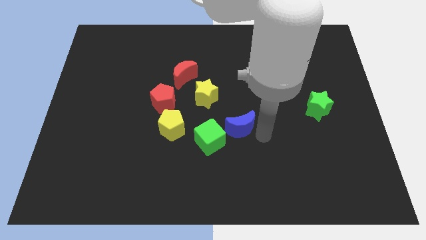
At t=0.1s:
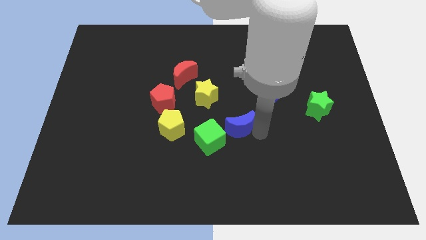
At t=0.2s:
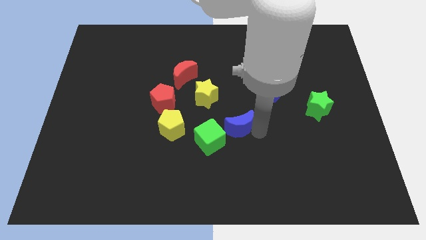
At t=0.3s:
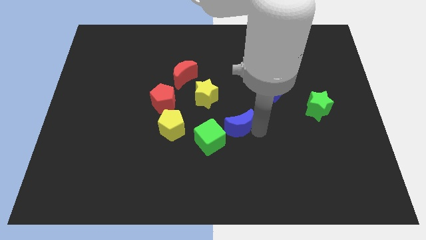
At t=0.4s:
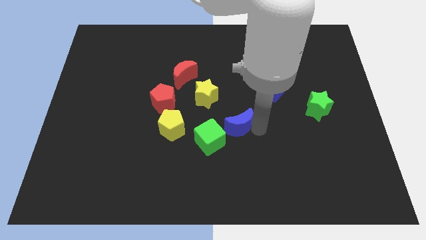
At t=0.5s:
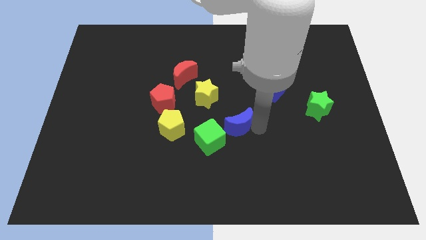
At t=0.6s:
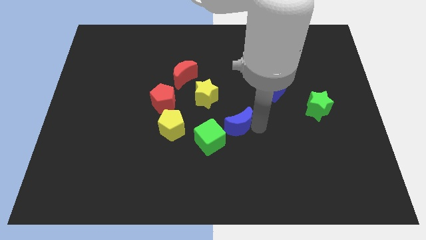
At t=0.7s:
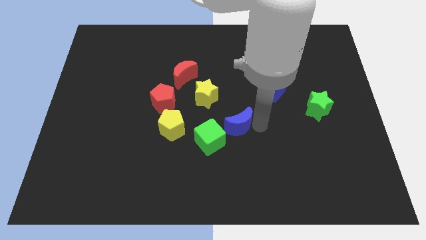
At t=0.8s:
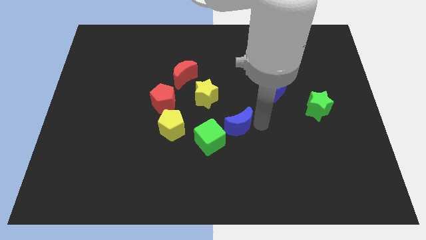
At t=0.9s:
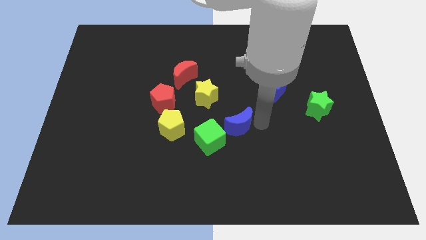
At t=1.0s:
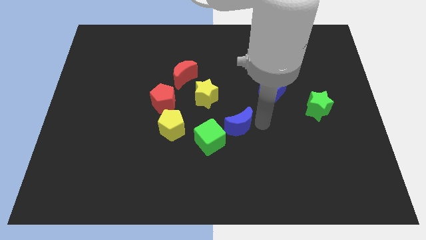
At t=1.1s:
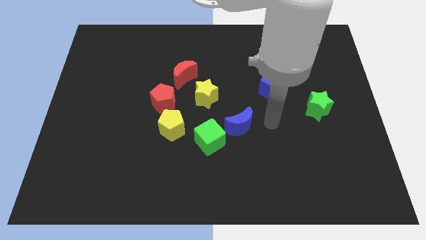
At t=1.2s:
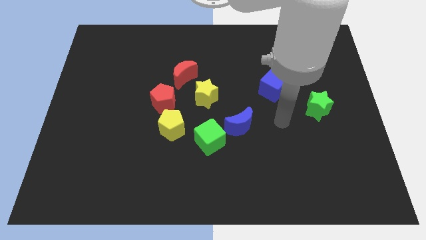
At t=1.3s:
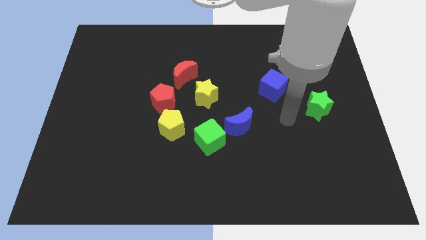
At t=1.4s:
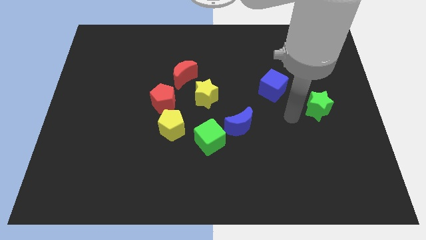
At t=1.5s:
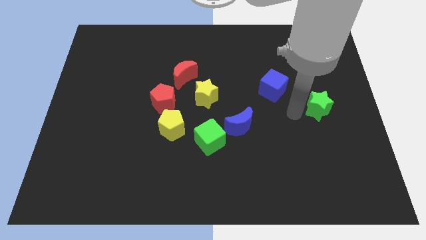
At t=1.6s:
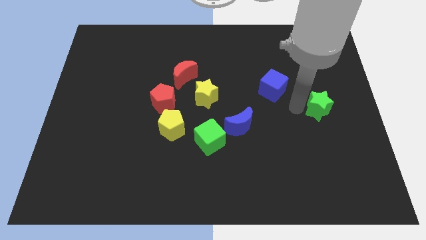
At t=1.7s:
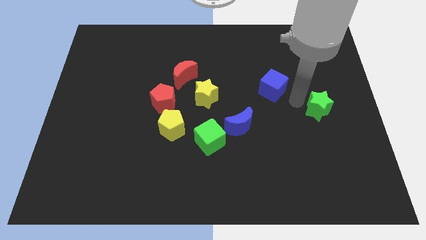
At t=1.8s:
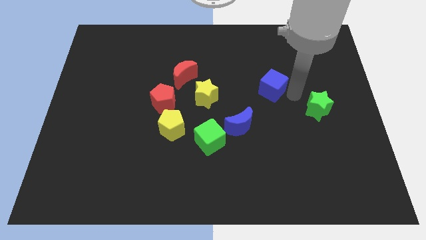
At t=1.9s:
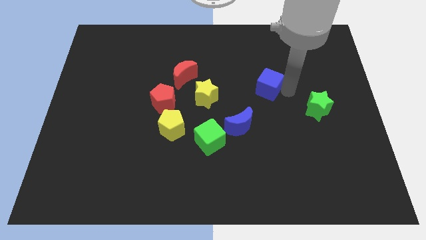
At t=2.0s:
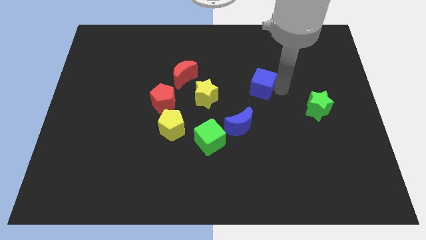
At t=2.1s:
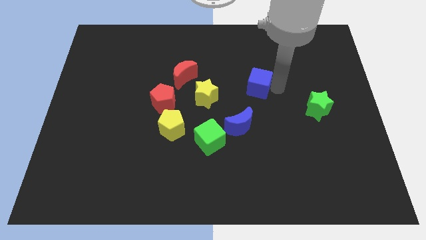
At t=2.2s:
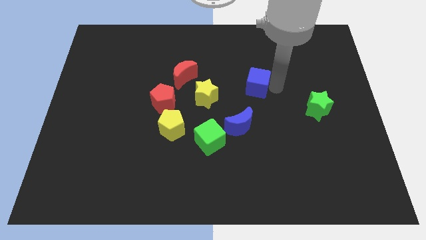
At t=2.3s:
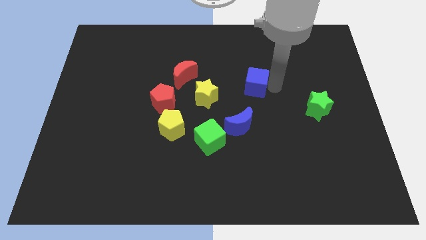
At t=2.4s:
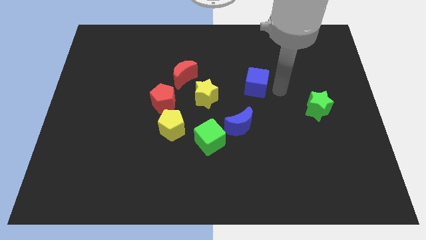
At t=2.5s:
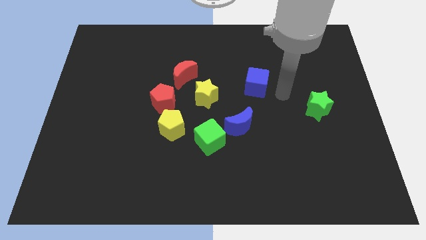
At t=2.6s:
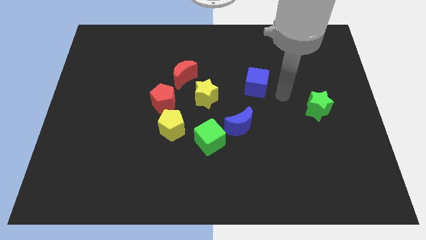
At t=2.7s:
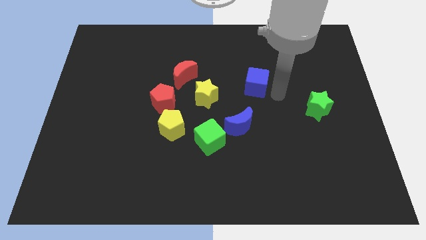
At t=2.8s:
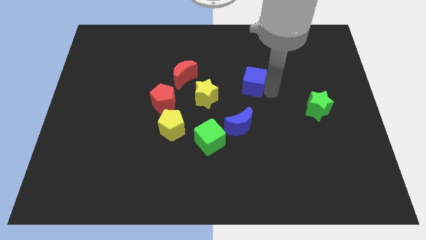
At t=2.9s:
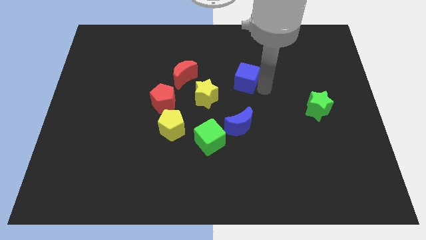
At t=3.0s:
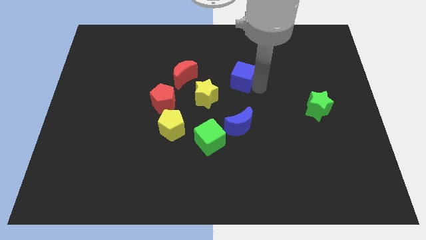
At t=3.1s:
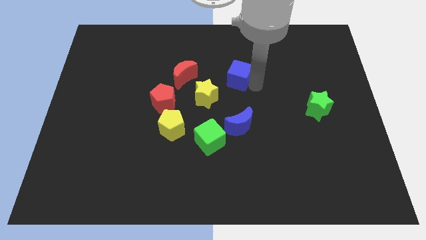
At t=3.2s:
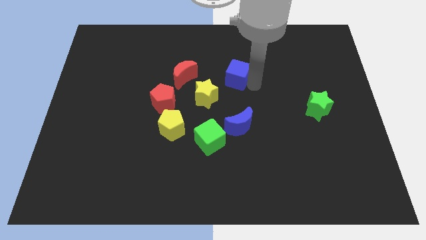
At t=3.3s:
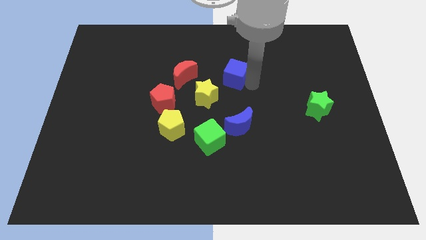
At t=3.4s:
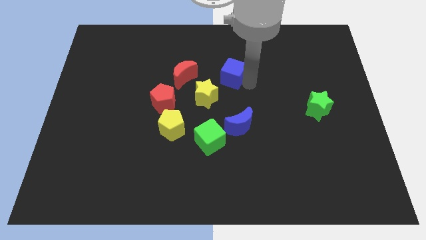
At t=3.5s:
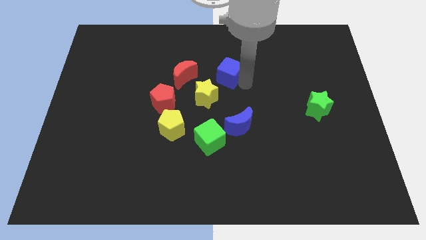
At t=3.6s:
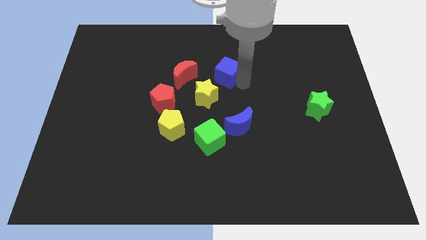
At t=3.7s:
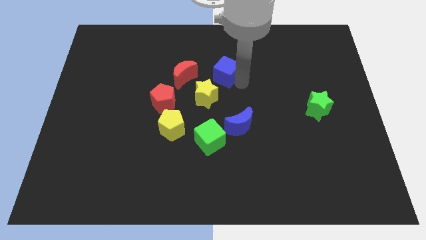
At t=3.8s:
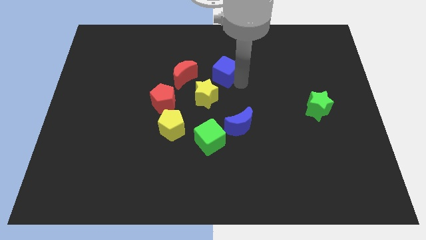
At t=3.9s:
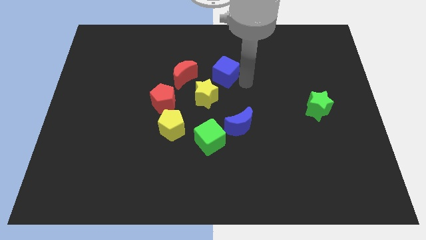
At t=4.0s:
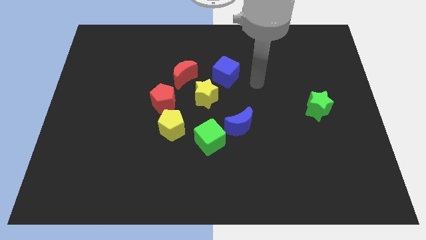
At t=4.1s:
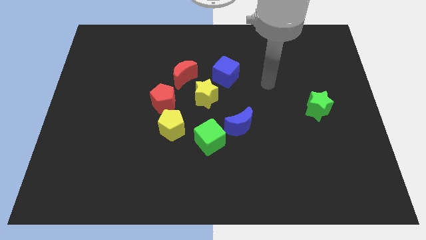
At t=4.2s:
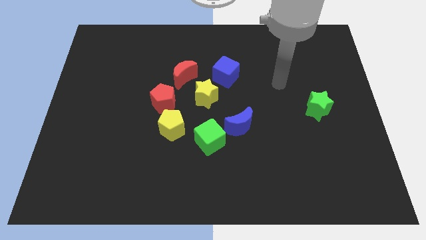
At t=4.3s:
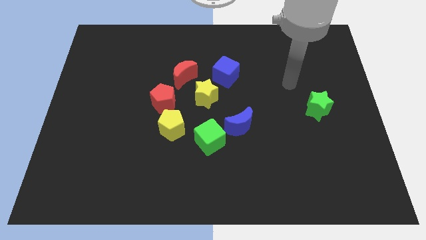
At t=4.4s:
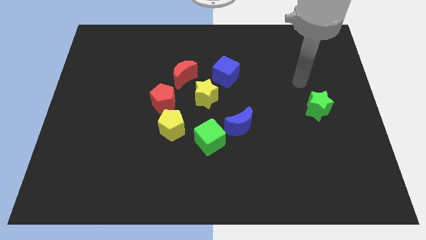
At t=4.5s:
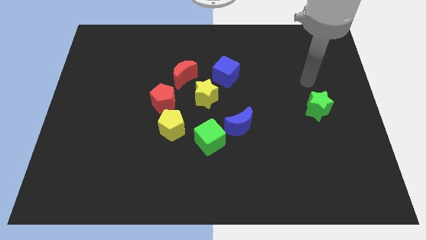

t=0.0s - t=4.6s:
move blue cube diagonally above yellow star

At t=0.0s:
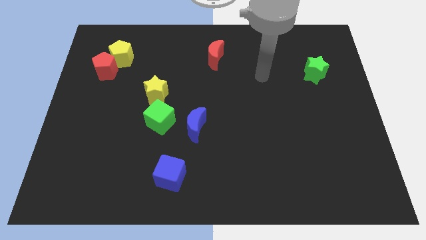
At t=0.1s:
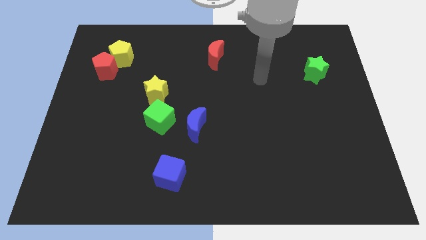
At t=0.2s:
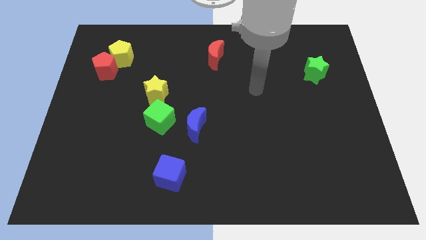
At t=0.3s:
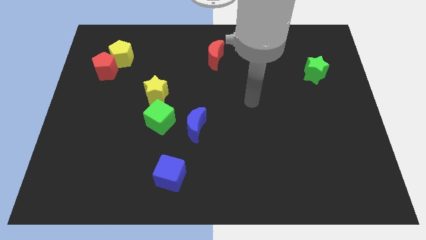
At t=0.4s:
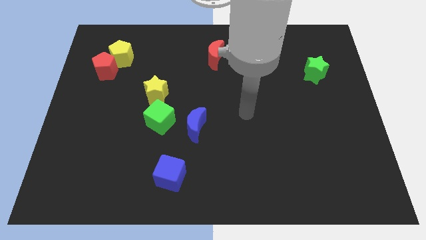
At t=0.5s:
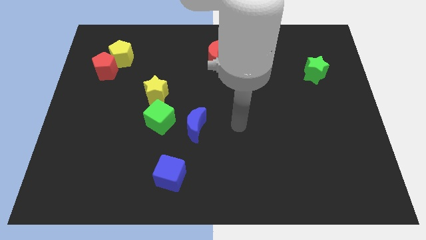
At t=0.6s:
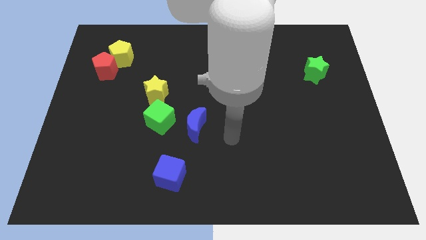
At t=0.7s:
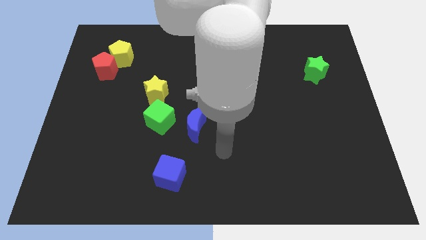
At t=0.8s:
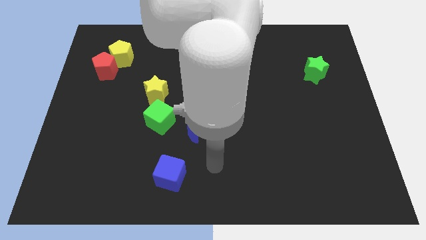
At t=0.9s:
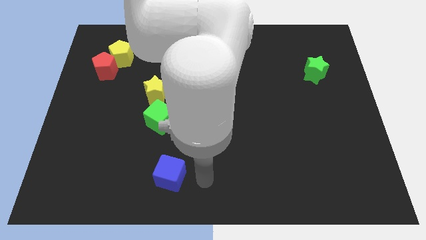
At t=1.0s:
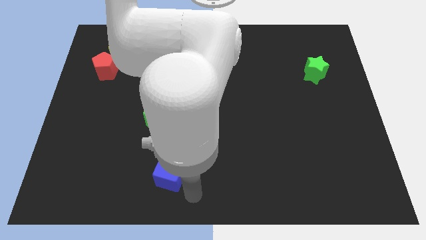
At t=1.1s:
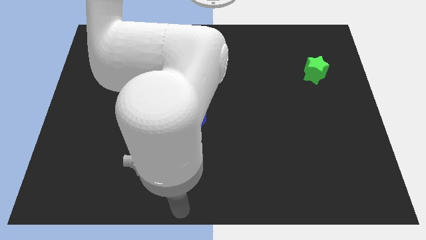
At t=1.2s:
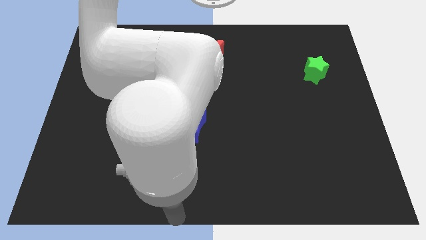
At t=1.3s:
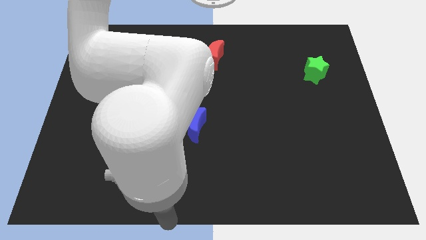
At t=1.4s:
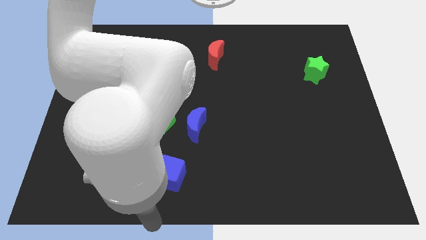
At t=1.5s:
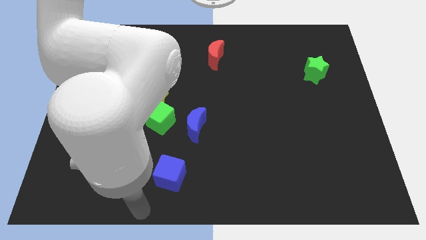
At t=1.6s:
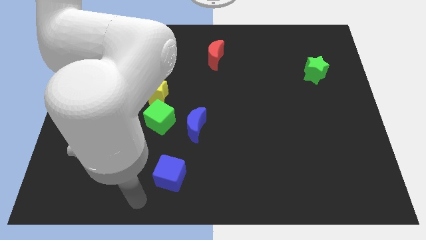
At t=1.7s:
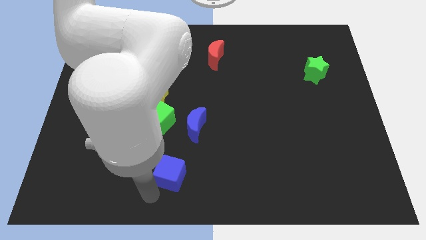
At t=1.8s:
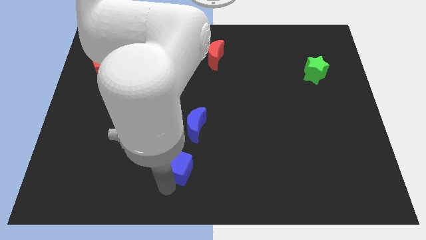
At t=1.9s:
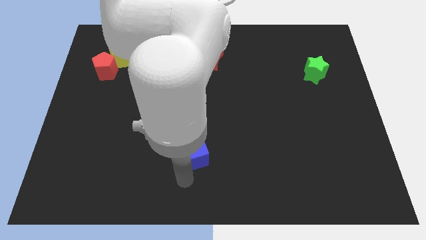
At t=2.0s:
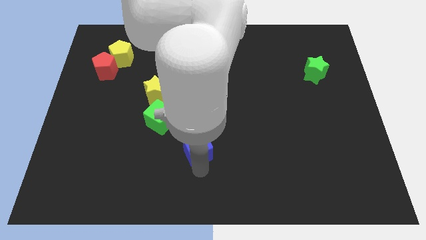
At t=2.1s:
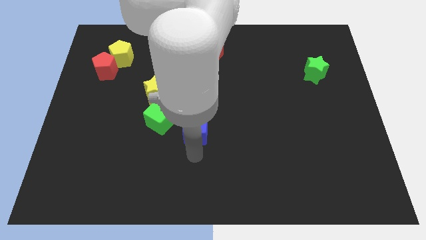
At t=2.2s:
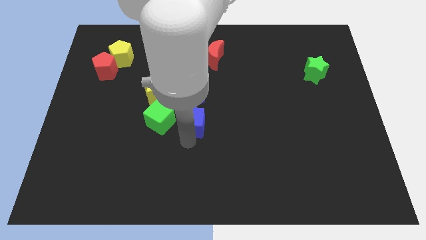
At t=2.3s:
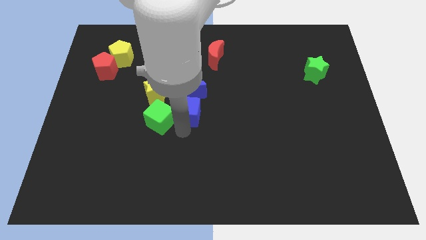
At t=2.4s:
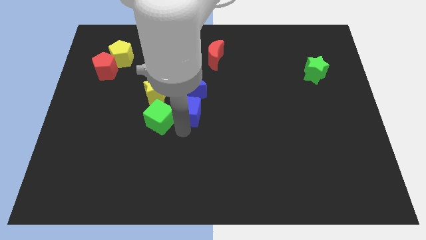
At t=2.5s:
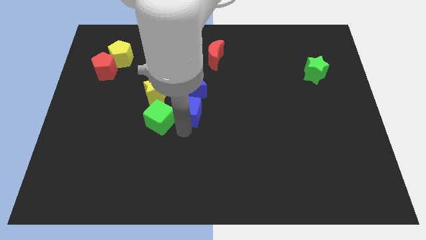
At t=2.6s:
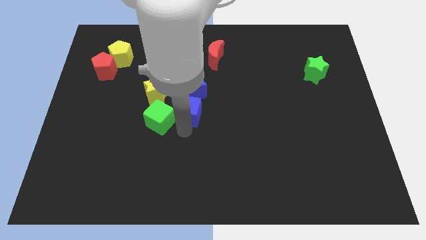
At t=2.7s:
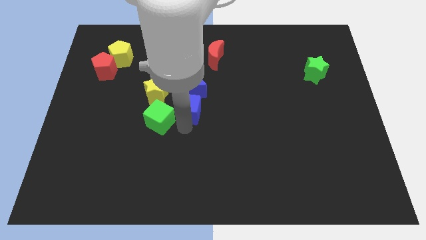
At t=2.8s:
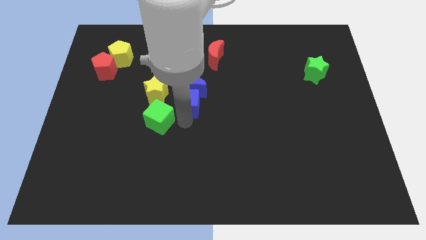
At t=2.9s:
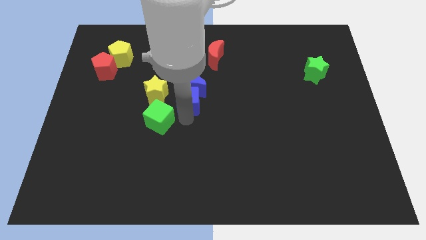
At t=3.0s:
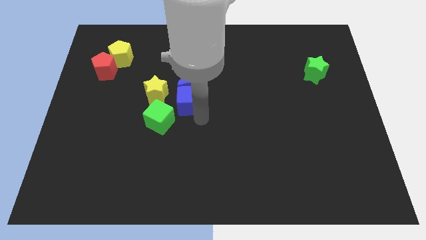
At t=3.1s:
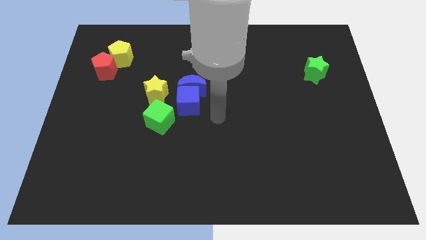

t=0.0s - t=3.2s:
push the blue cube in to blue moon

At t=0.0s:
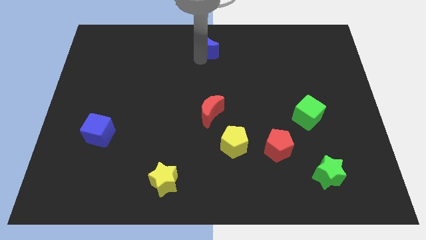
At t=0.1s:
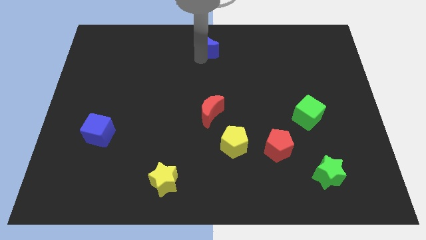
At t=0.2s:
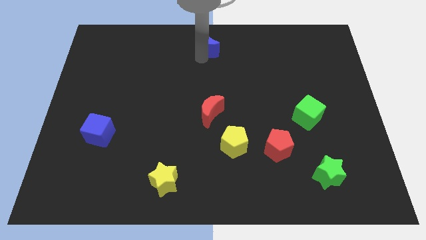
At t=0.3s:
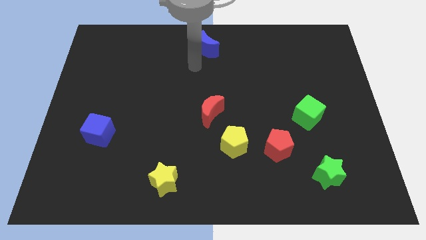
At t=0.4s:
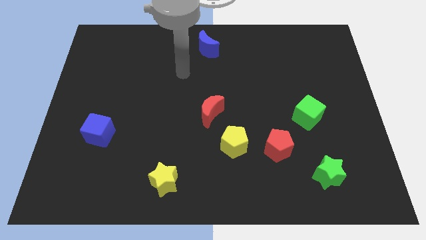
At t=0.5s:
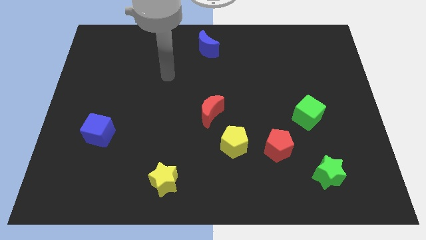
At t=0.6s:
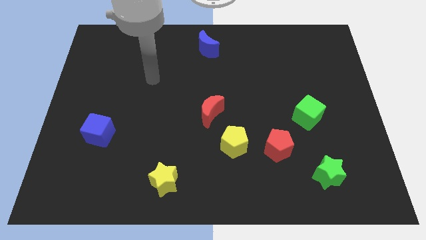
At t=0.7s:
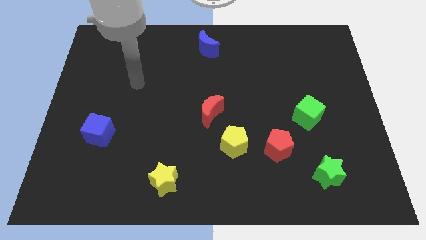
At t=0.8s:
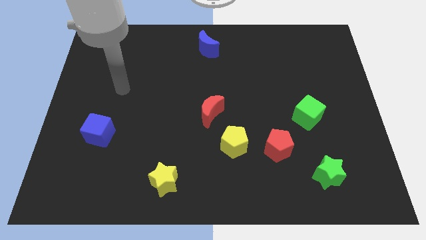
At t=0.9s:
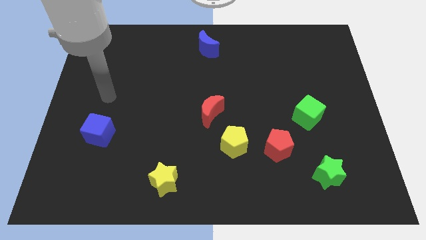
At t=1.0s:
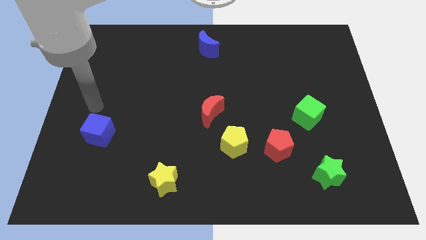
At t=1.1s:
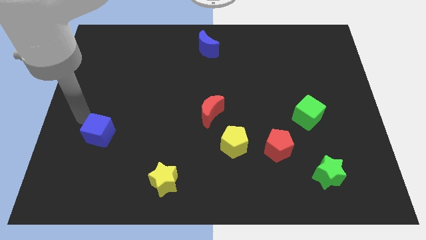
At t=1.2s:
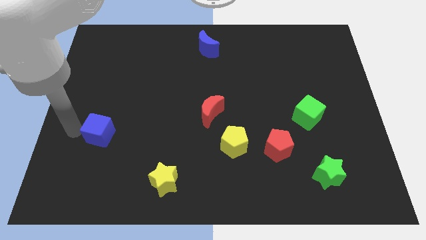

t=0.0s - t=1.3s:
move blue crescent to the top center
